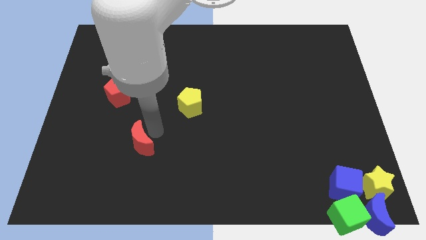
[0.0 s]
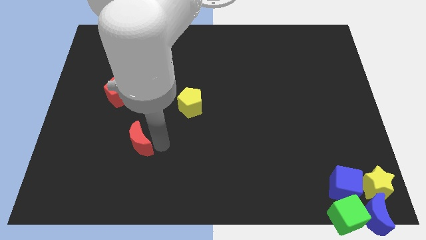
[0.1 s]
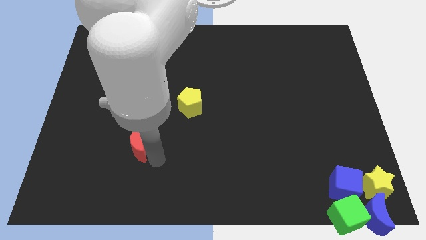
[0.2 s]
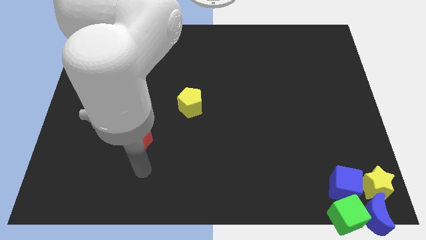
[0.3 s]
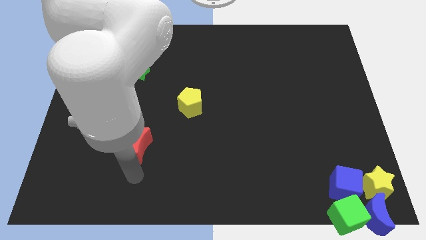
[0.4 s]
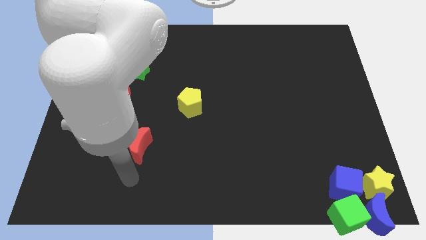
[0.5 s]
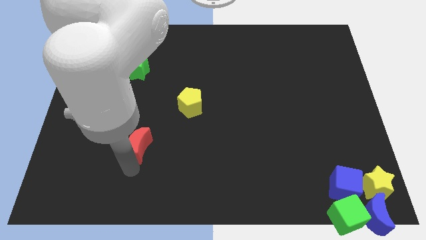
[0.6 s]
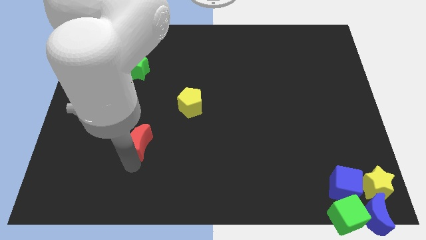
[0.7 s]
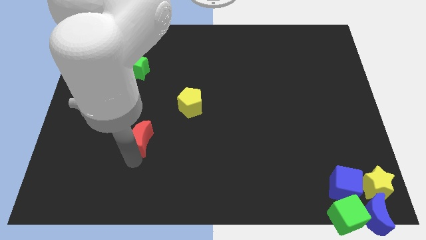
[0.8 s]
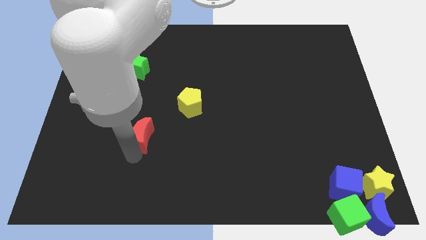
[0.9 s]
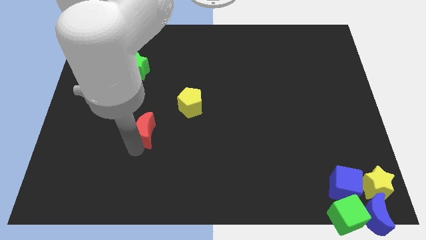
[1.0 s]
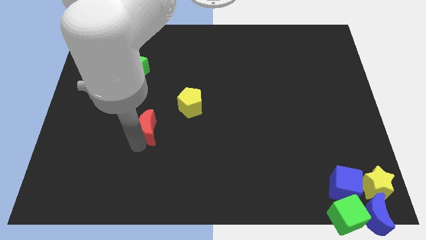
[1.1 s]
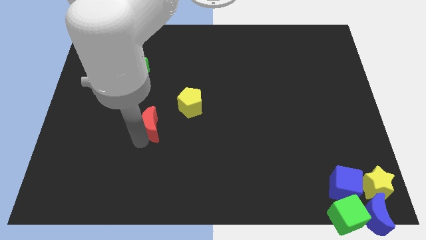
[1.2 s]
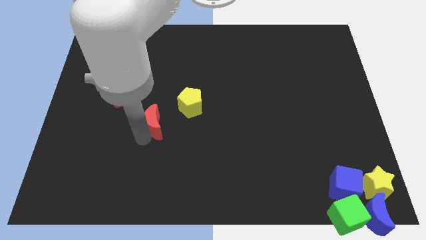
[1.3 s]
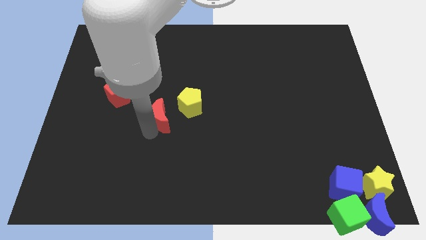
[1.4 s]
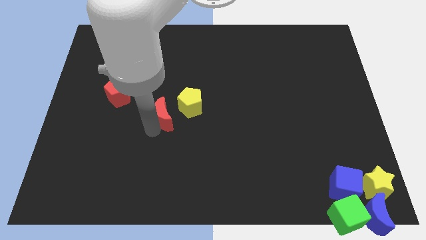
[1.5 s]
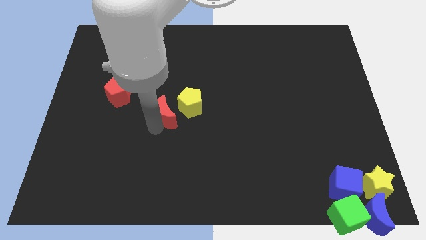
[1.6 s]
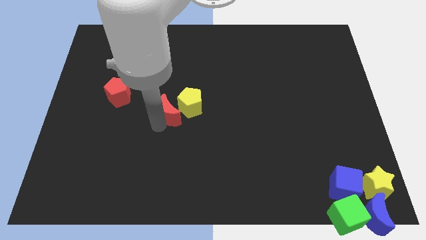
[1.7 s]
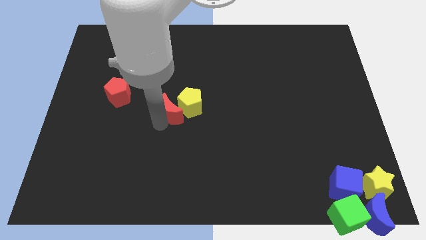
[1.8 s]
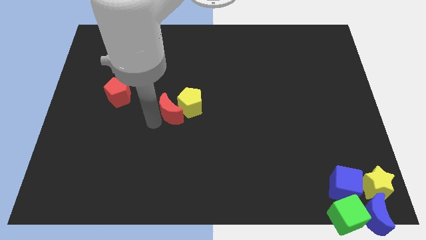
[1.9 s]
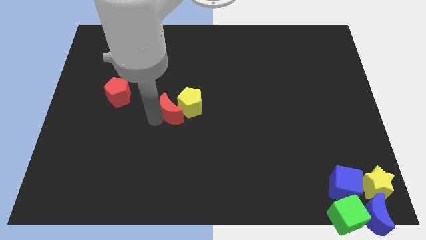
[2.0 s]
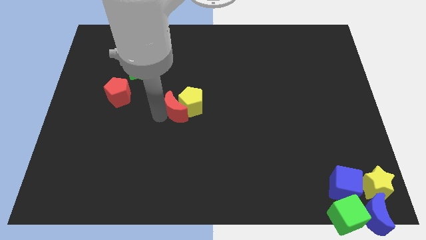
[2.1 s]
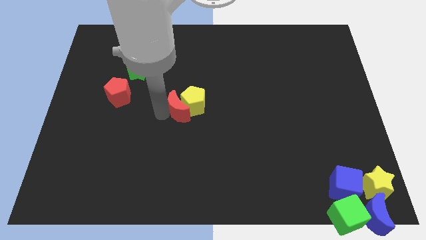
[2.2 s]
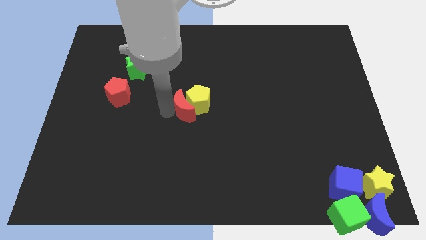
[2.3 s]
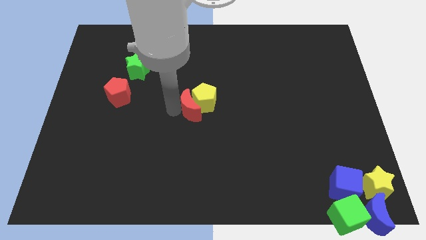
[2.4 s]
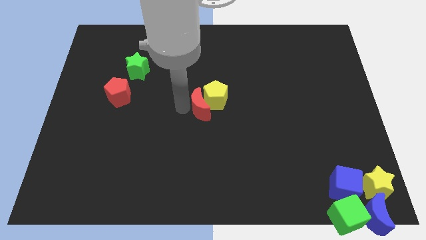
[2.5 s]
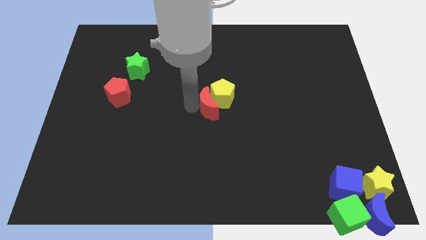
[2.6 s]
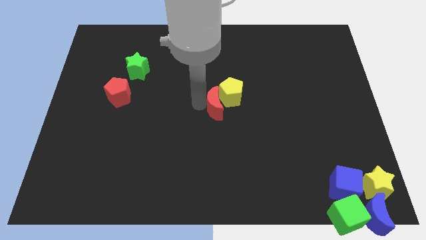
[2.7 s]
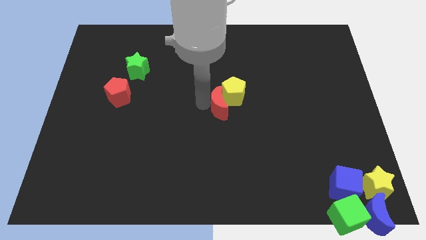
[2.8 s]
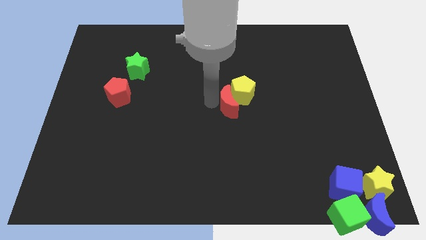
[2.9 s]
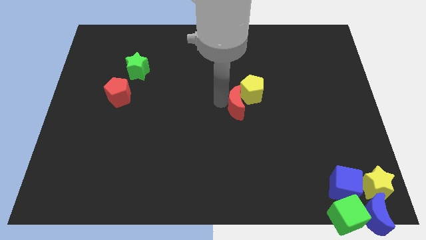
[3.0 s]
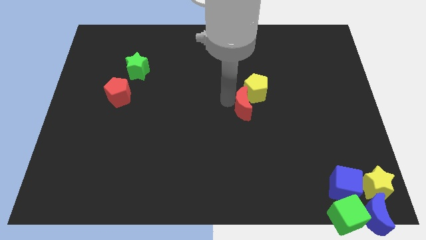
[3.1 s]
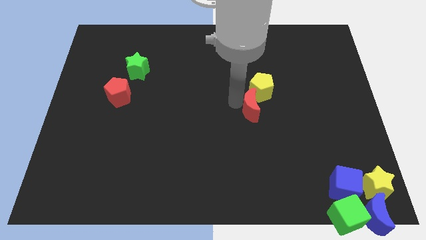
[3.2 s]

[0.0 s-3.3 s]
push the yellow pentagon and the red moon towards the left side of the board

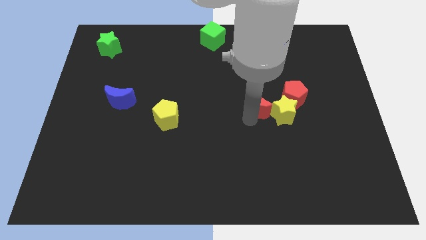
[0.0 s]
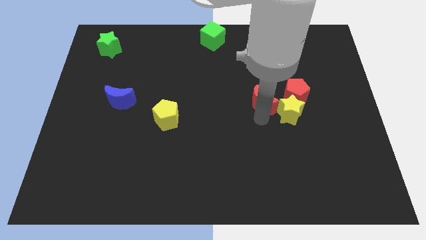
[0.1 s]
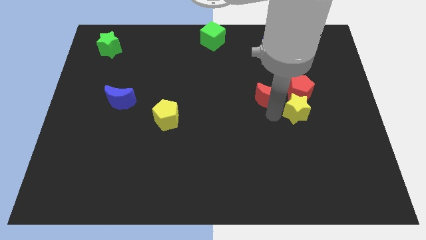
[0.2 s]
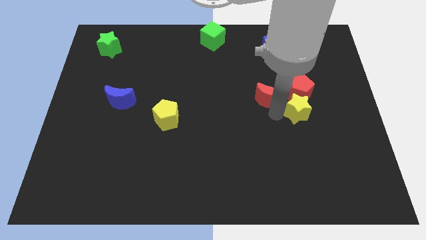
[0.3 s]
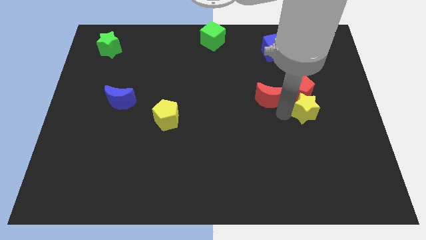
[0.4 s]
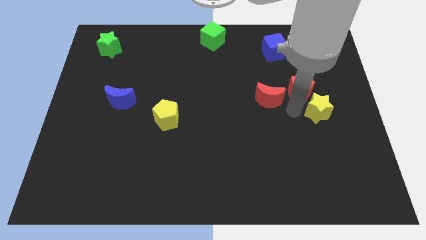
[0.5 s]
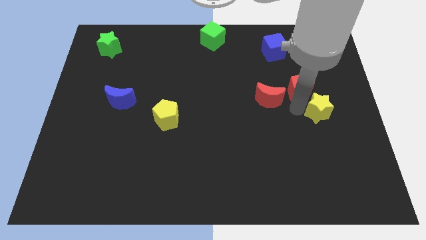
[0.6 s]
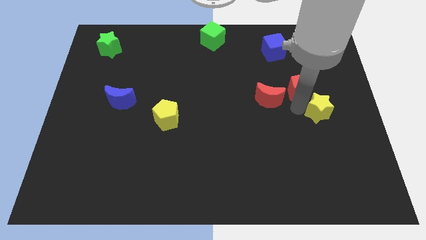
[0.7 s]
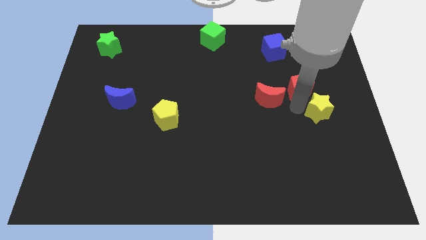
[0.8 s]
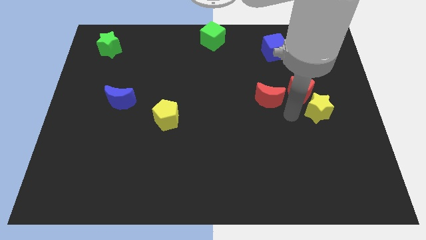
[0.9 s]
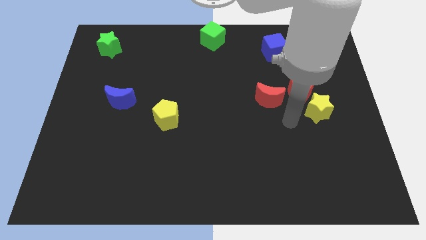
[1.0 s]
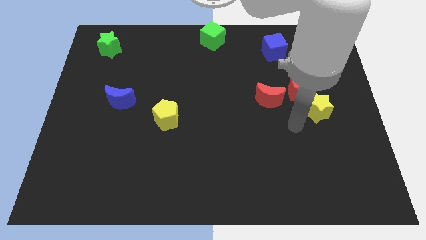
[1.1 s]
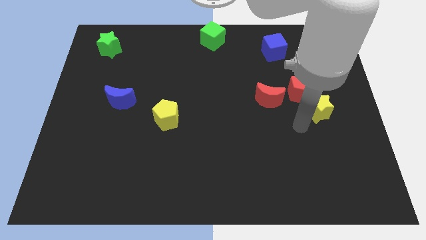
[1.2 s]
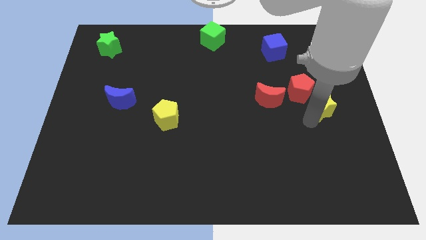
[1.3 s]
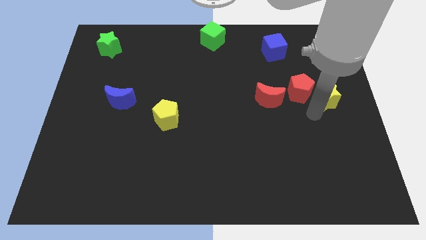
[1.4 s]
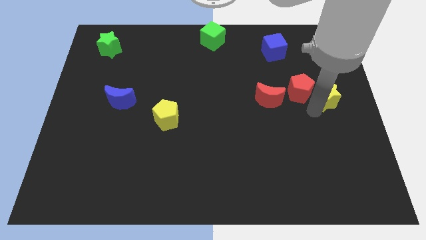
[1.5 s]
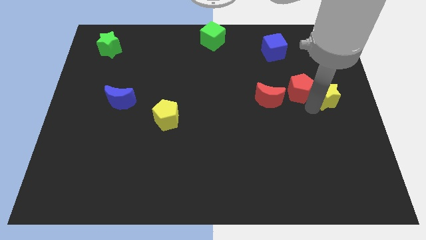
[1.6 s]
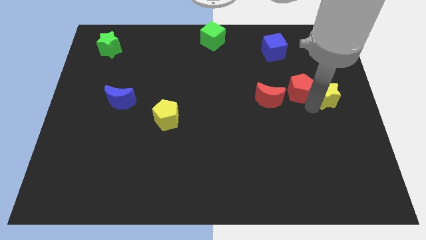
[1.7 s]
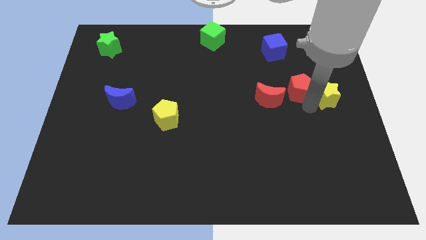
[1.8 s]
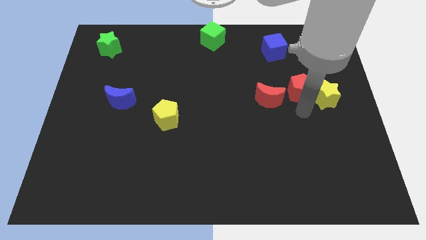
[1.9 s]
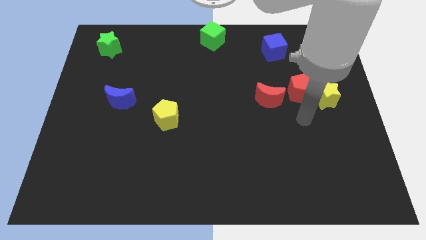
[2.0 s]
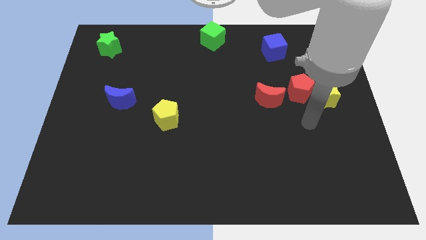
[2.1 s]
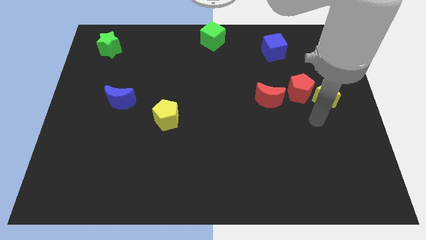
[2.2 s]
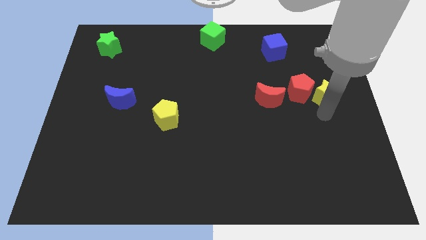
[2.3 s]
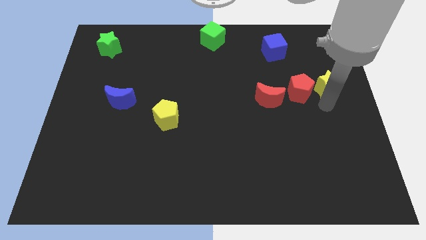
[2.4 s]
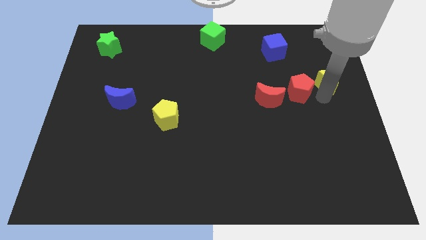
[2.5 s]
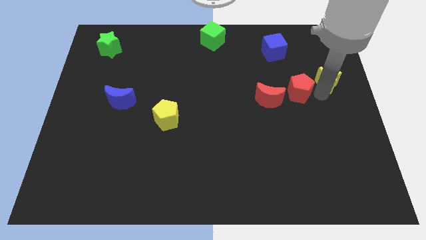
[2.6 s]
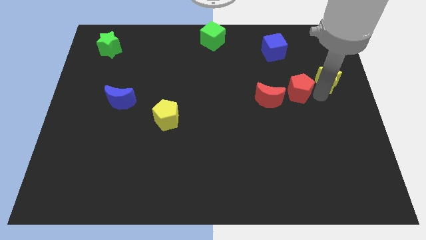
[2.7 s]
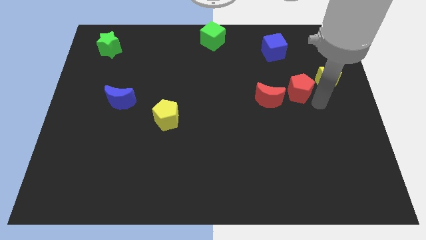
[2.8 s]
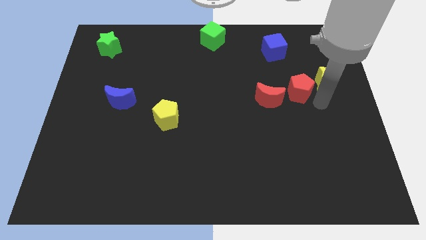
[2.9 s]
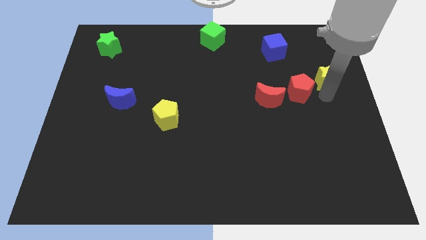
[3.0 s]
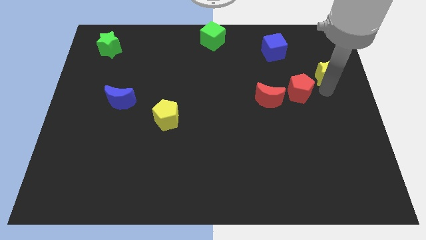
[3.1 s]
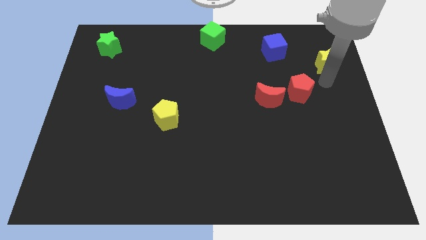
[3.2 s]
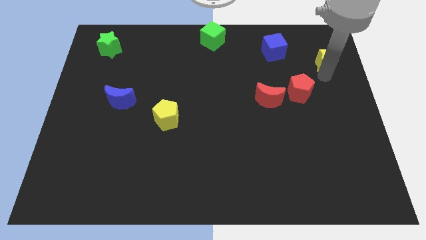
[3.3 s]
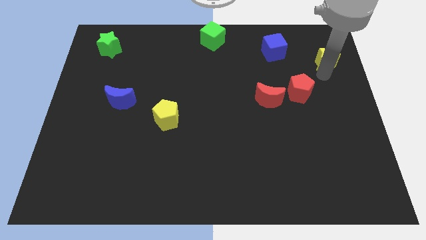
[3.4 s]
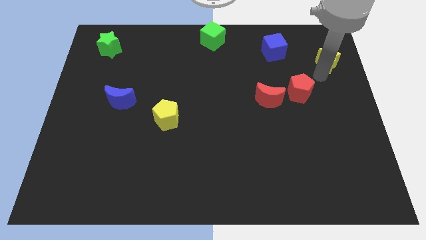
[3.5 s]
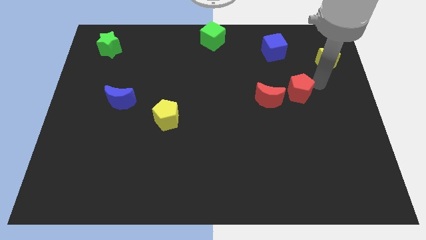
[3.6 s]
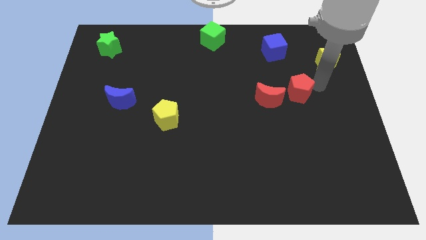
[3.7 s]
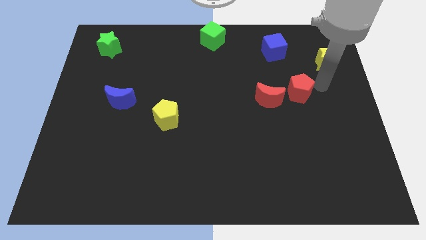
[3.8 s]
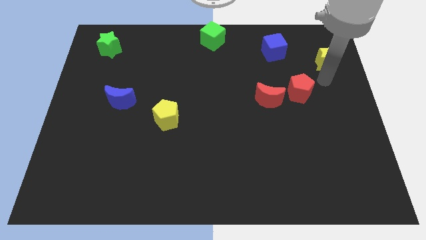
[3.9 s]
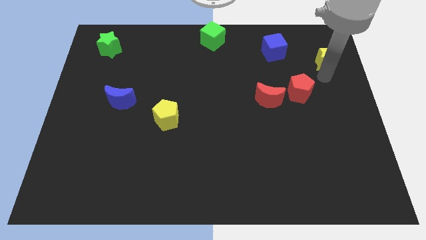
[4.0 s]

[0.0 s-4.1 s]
separate yellow star from red blocks

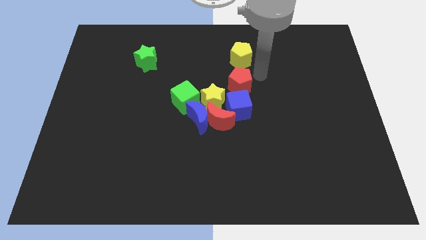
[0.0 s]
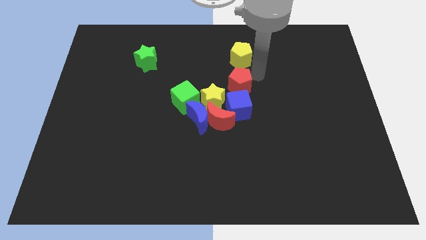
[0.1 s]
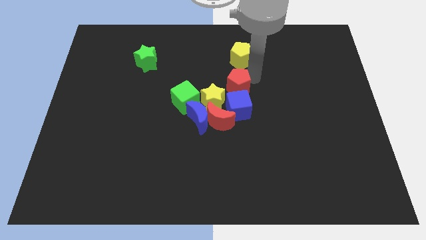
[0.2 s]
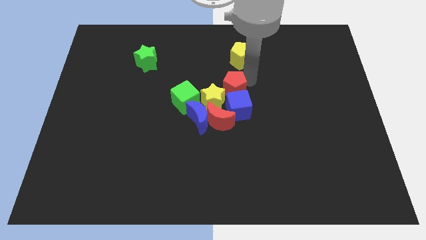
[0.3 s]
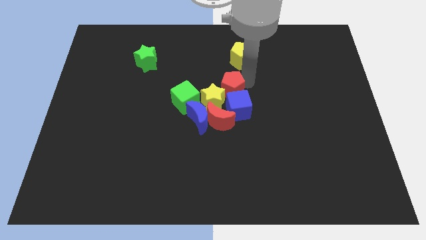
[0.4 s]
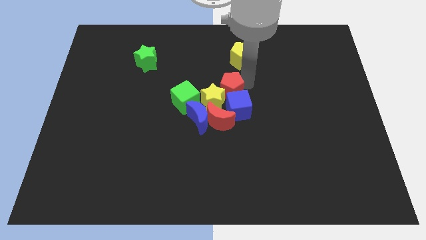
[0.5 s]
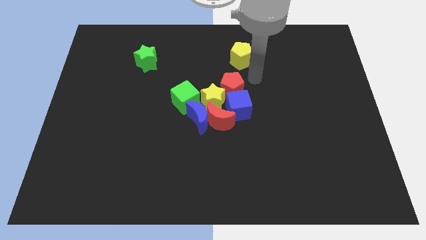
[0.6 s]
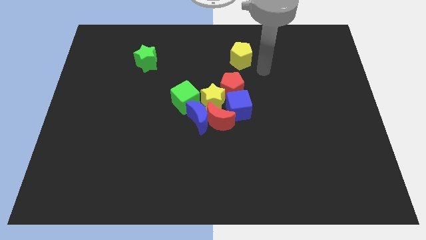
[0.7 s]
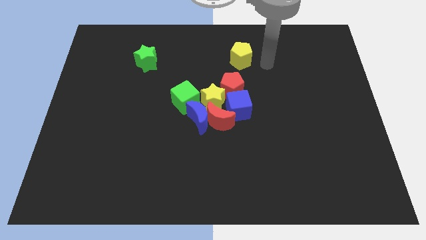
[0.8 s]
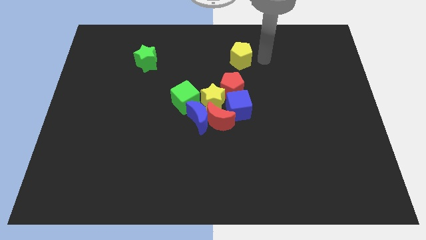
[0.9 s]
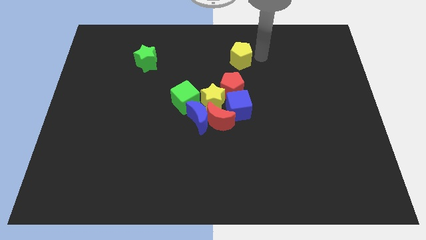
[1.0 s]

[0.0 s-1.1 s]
move the red pentagon into the group of objects

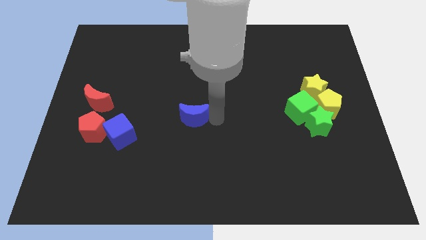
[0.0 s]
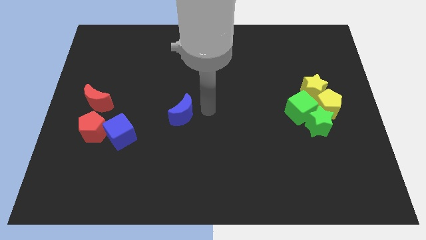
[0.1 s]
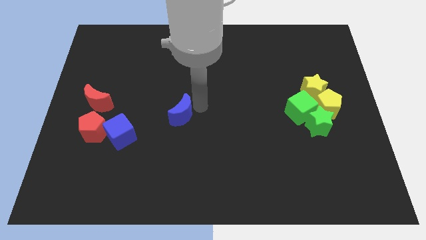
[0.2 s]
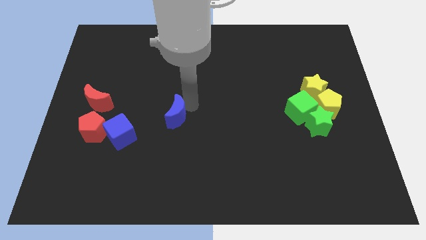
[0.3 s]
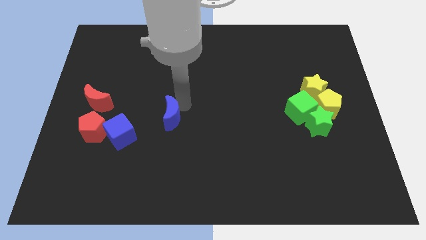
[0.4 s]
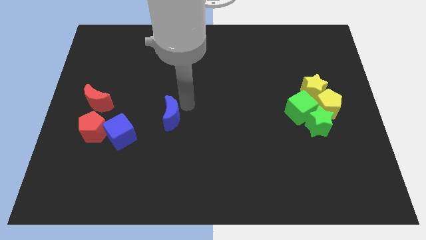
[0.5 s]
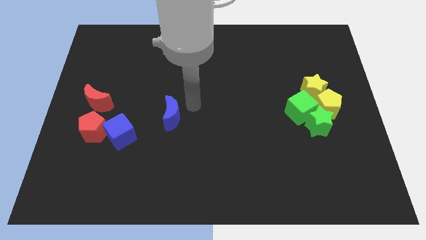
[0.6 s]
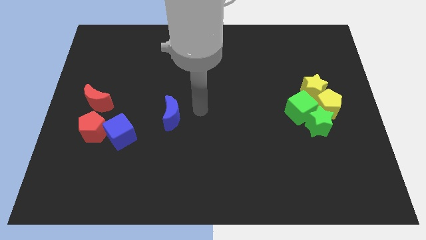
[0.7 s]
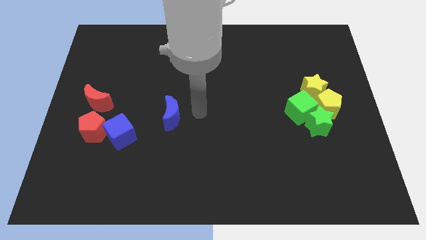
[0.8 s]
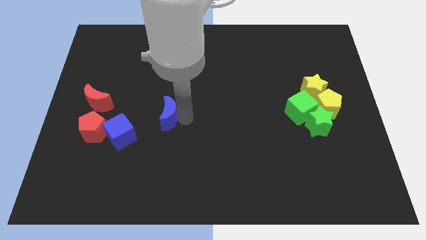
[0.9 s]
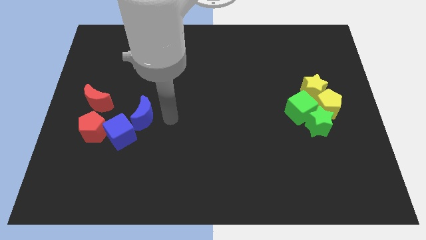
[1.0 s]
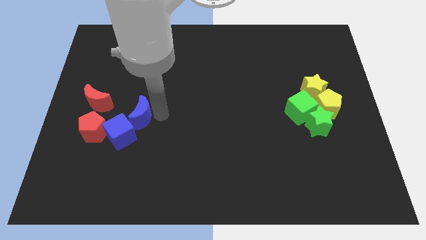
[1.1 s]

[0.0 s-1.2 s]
move the blue crescent to the right of the blue cube
